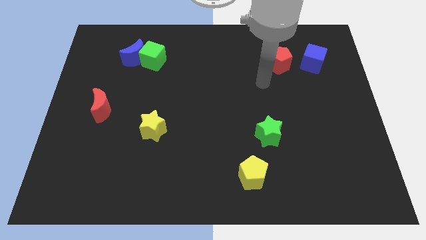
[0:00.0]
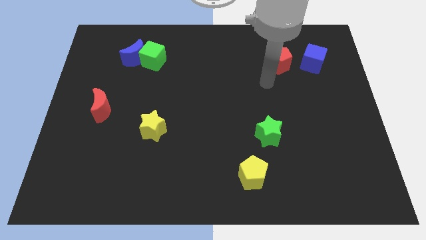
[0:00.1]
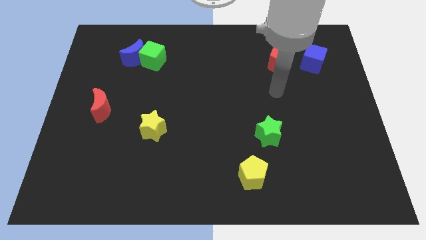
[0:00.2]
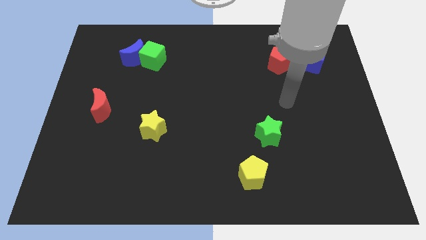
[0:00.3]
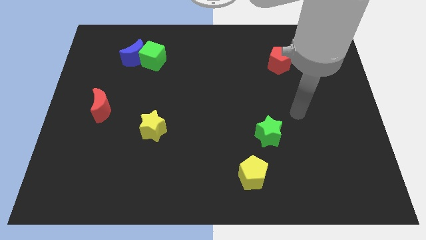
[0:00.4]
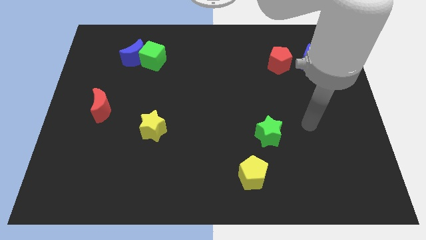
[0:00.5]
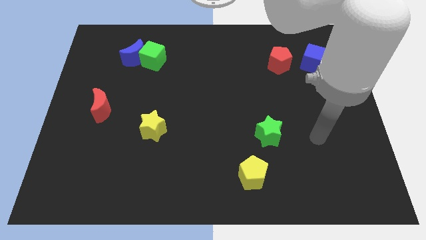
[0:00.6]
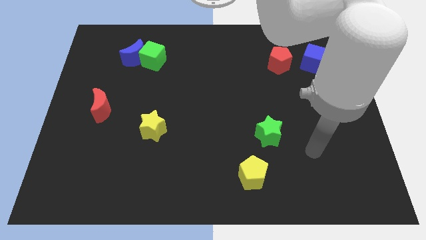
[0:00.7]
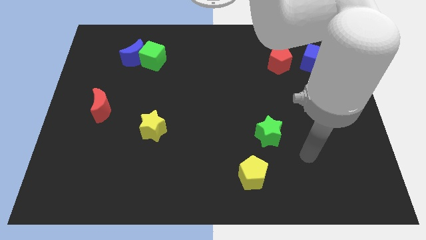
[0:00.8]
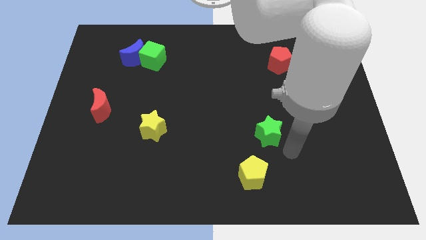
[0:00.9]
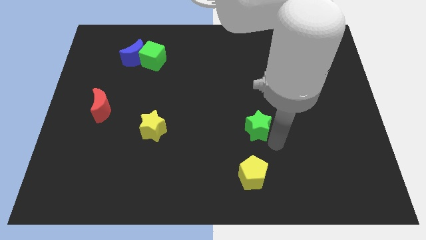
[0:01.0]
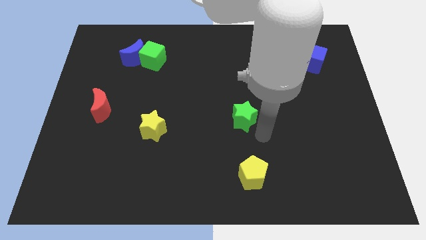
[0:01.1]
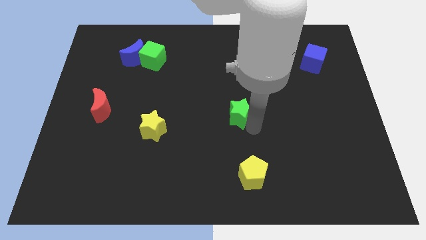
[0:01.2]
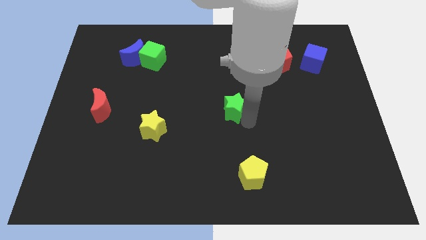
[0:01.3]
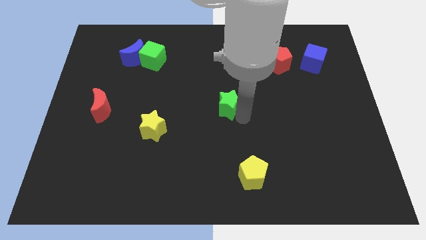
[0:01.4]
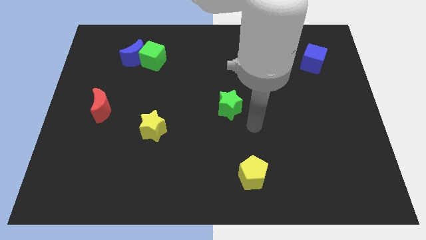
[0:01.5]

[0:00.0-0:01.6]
go and push the green star to the center of the board

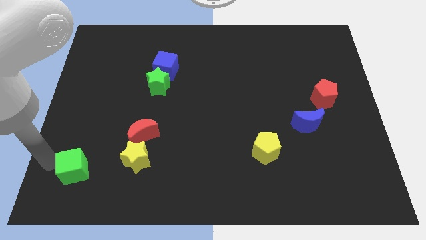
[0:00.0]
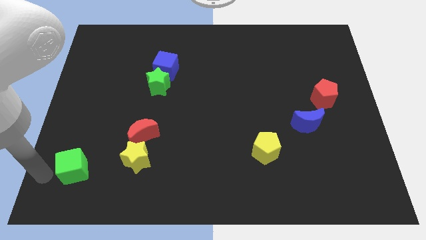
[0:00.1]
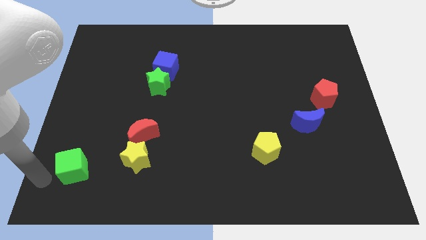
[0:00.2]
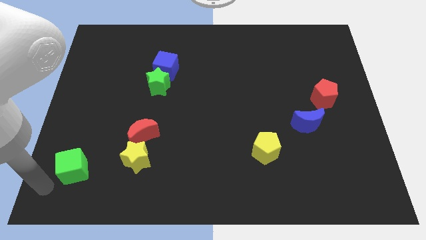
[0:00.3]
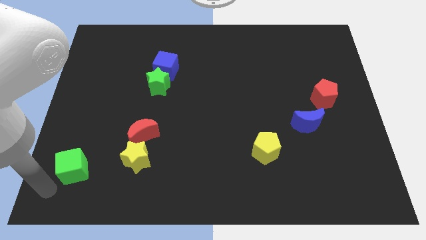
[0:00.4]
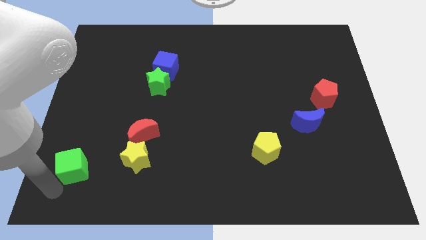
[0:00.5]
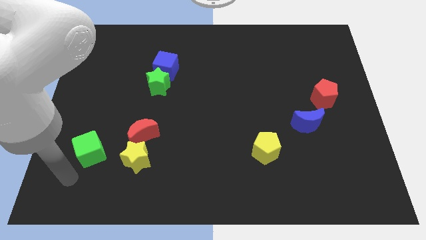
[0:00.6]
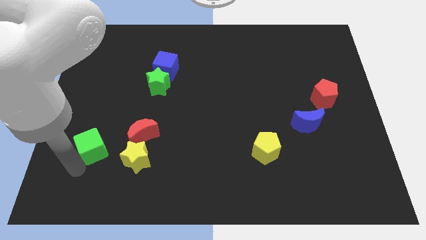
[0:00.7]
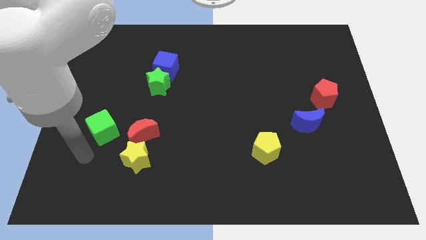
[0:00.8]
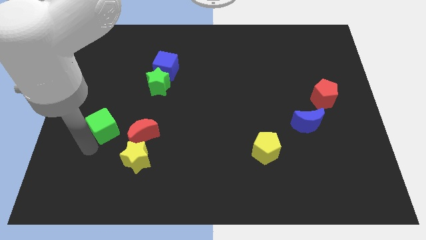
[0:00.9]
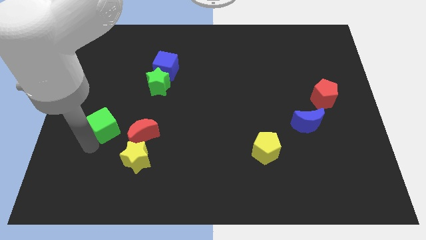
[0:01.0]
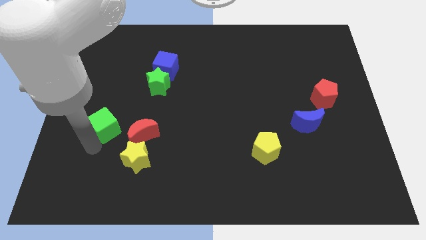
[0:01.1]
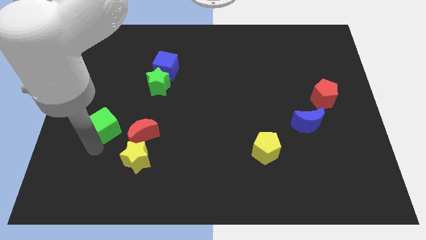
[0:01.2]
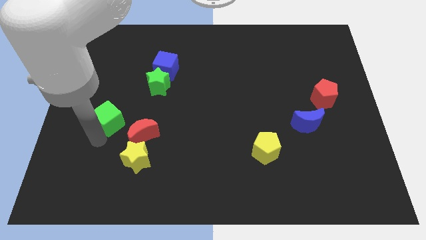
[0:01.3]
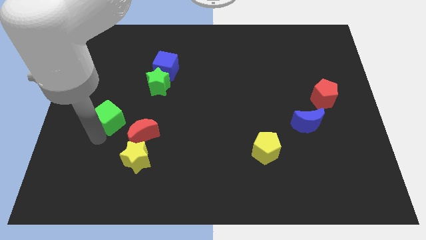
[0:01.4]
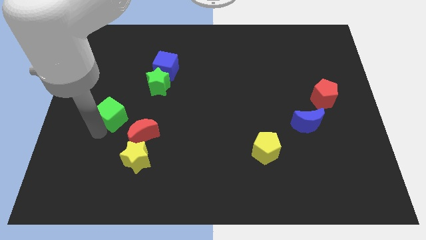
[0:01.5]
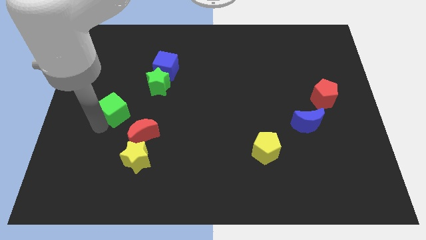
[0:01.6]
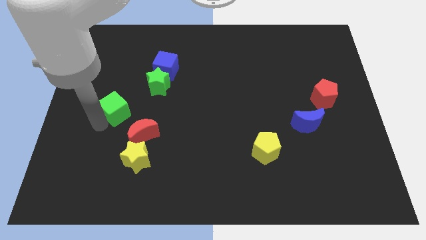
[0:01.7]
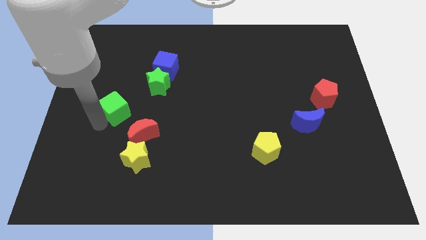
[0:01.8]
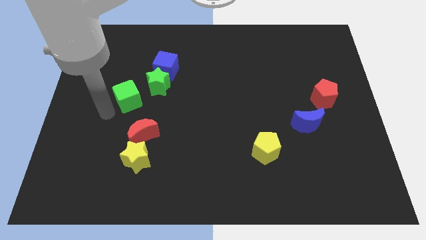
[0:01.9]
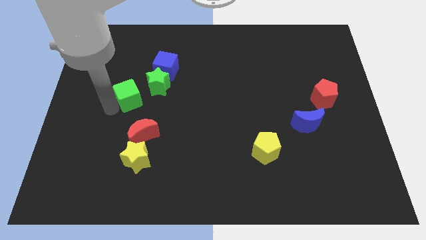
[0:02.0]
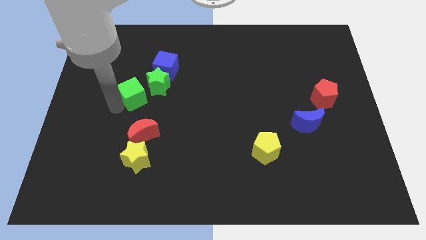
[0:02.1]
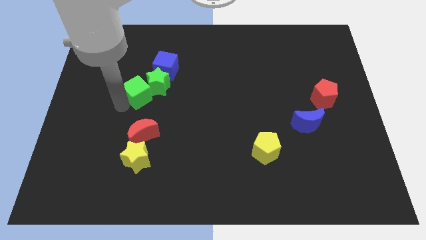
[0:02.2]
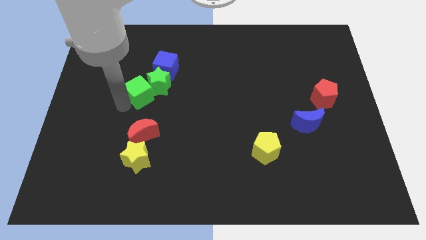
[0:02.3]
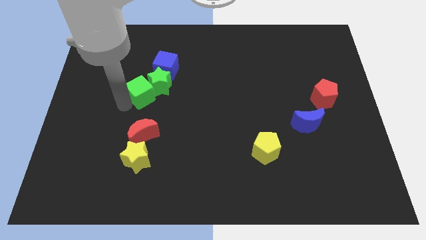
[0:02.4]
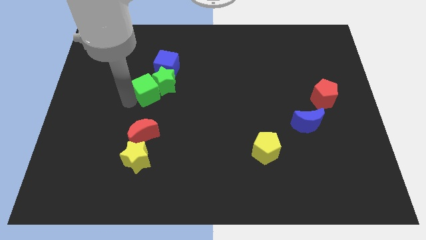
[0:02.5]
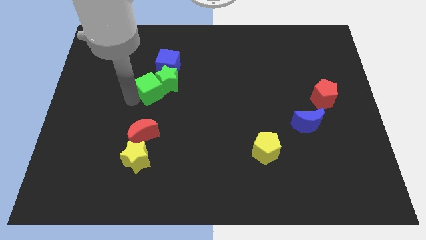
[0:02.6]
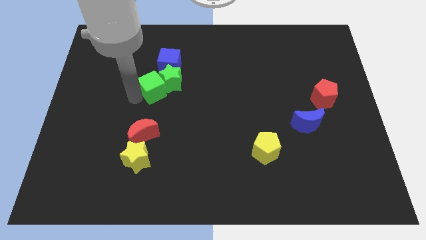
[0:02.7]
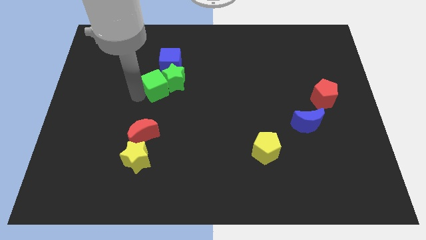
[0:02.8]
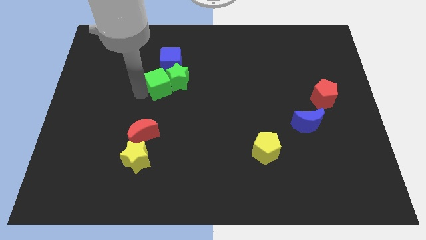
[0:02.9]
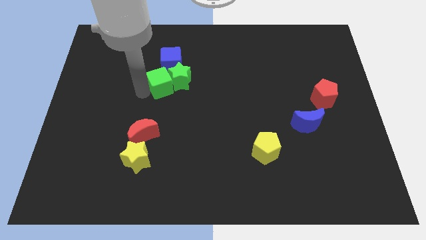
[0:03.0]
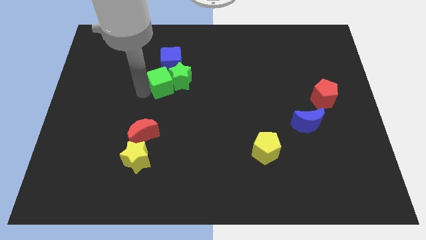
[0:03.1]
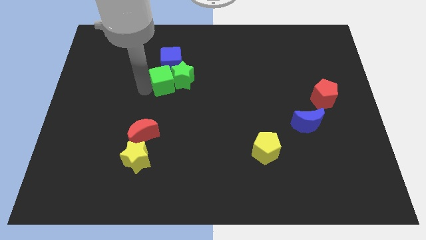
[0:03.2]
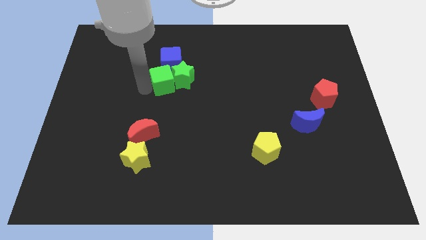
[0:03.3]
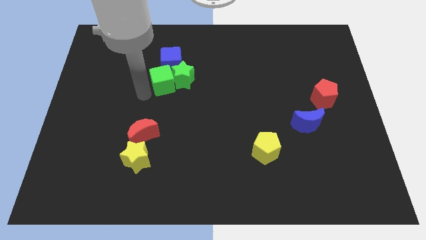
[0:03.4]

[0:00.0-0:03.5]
push the green cube into the green star

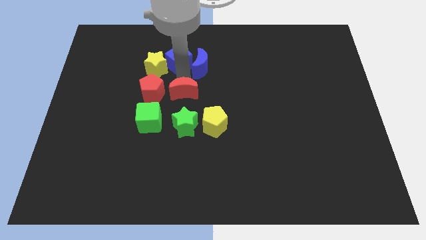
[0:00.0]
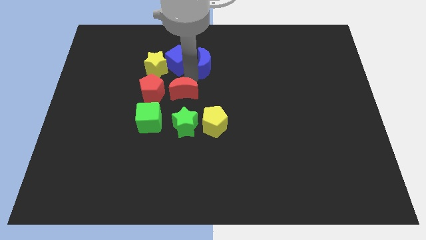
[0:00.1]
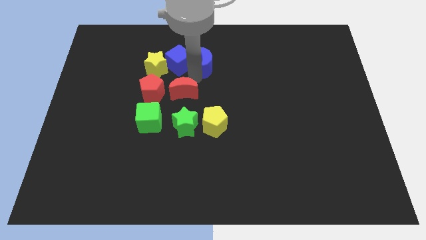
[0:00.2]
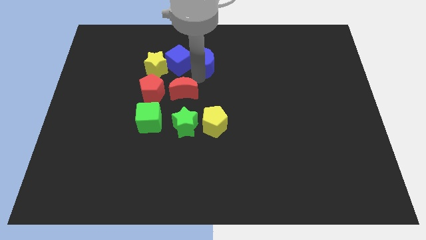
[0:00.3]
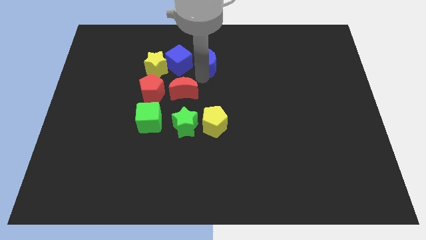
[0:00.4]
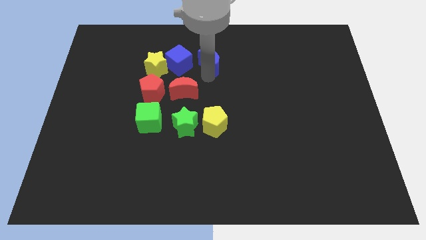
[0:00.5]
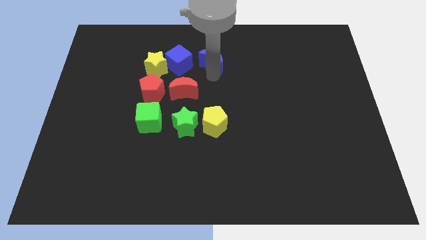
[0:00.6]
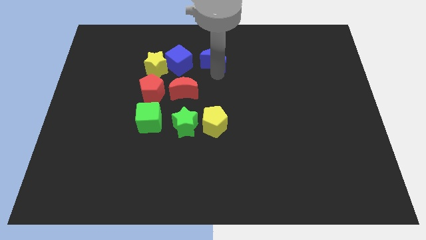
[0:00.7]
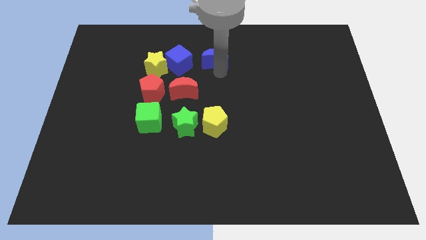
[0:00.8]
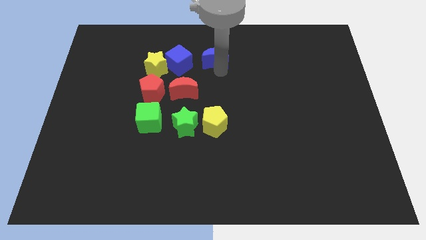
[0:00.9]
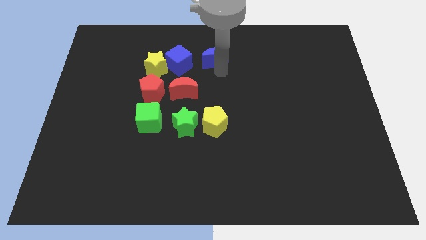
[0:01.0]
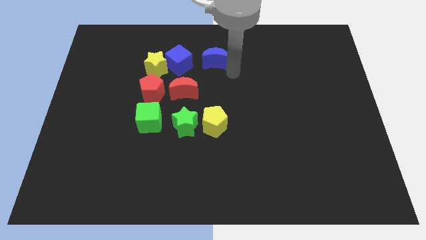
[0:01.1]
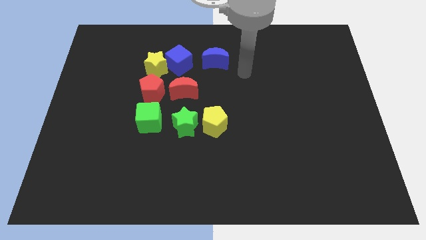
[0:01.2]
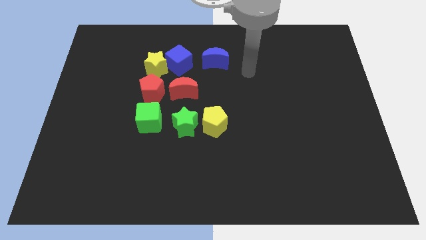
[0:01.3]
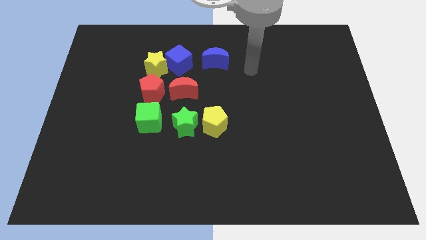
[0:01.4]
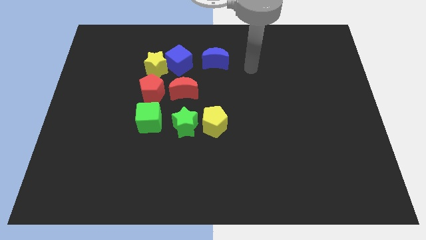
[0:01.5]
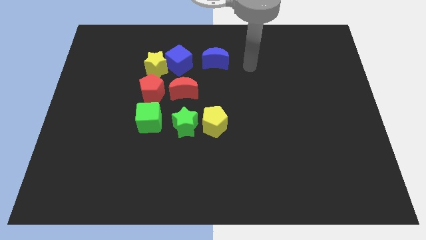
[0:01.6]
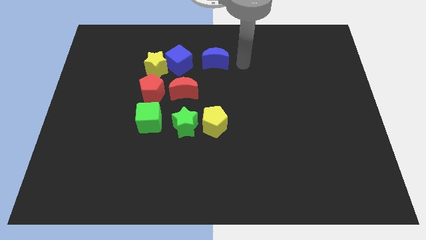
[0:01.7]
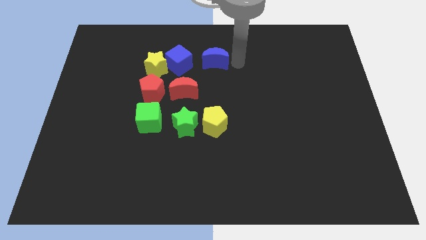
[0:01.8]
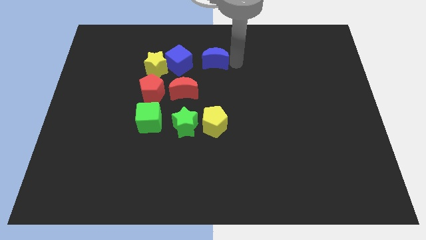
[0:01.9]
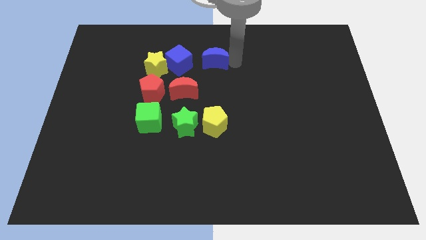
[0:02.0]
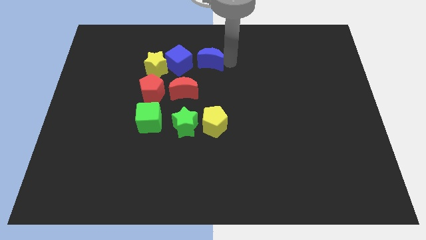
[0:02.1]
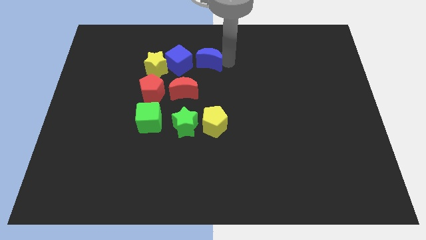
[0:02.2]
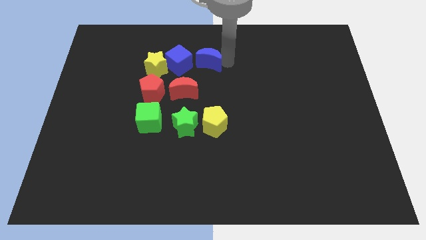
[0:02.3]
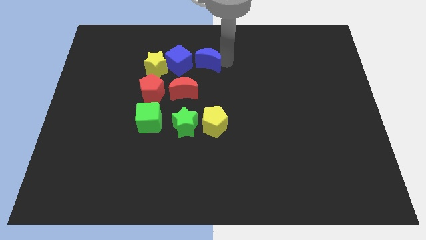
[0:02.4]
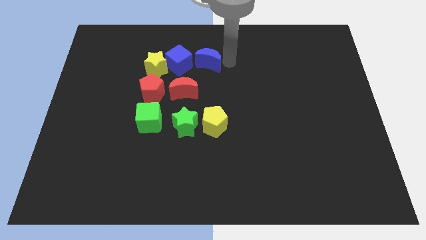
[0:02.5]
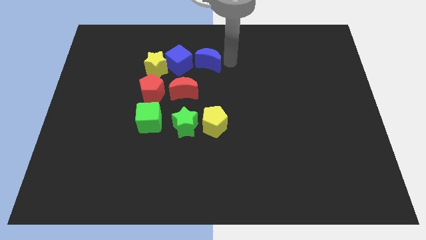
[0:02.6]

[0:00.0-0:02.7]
move the blue crescent slightly to the right

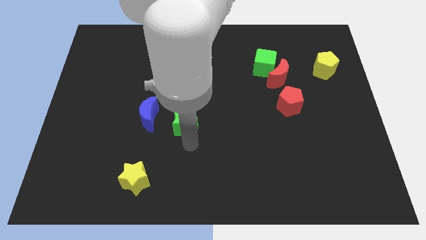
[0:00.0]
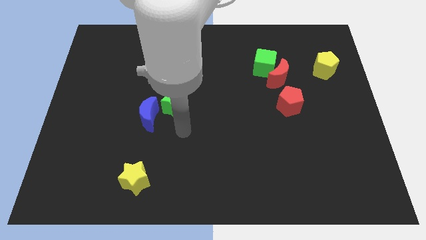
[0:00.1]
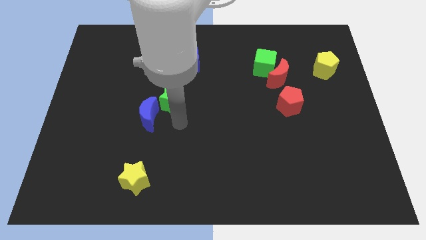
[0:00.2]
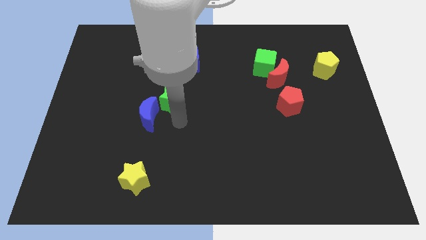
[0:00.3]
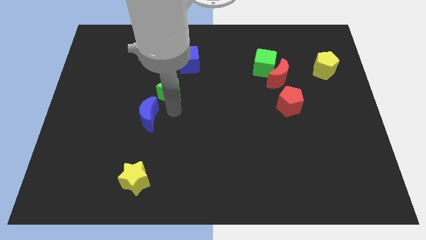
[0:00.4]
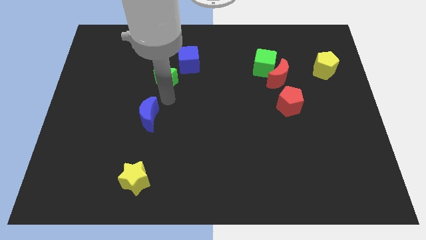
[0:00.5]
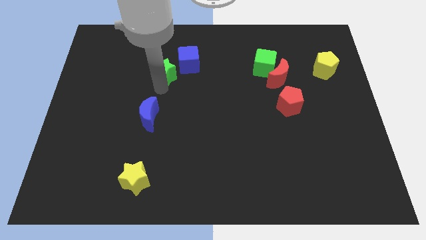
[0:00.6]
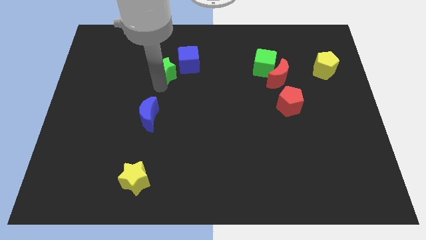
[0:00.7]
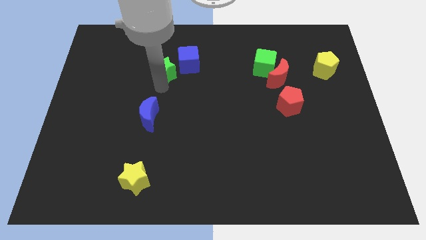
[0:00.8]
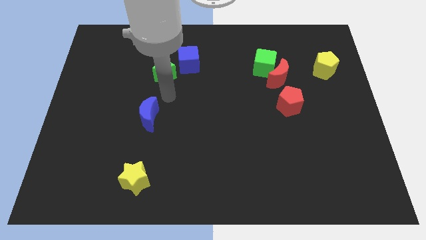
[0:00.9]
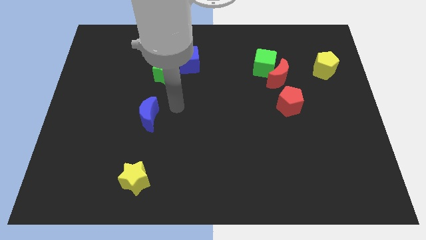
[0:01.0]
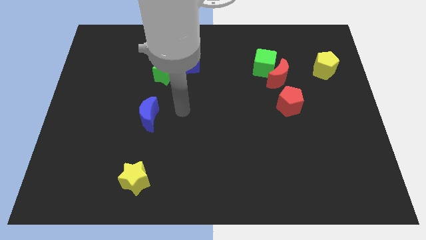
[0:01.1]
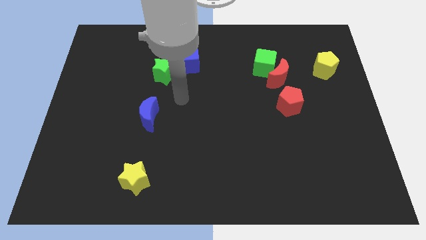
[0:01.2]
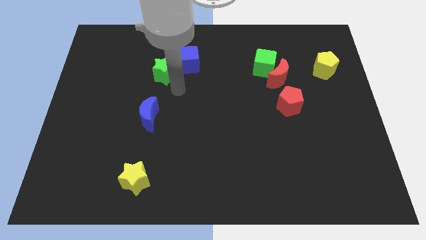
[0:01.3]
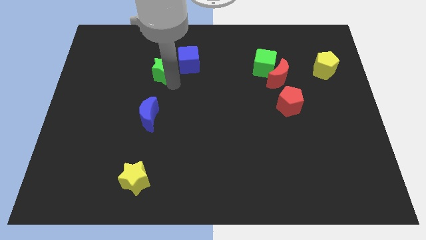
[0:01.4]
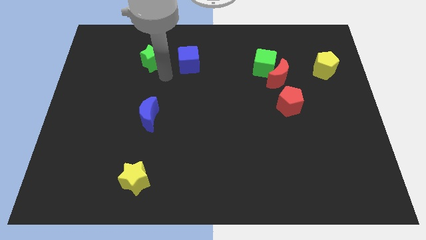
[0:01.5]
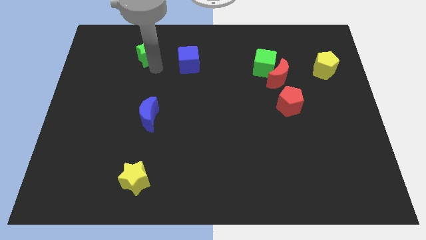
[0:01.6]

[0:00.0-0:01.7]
move the green star to the left of the blue cube
